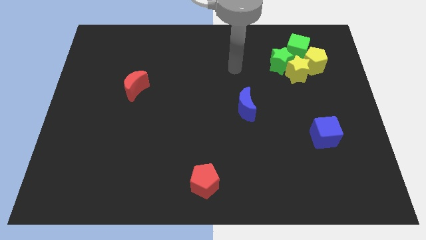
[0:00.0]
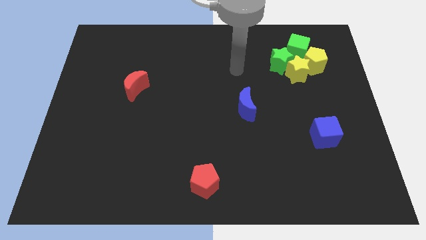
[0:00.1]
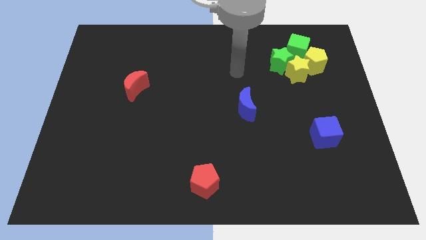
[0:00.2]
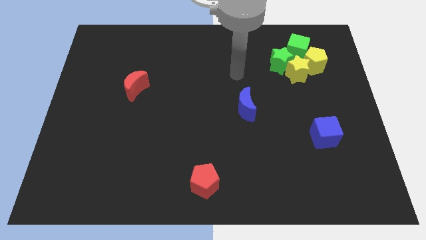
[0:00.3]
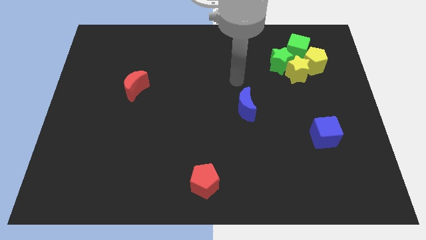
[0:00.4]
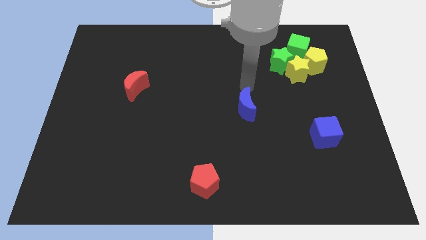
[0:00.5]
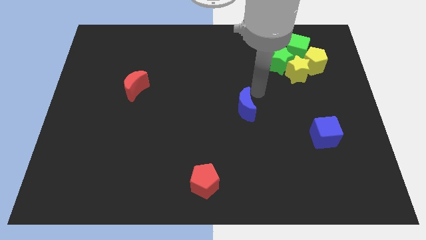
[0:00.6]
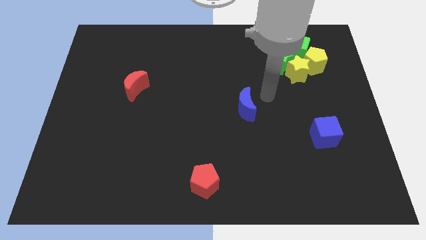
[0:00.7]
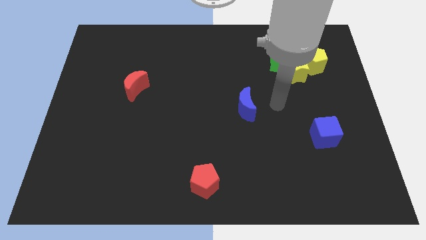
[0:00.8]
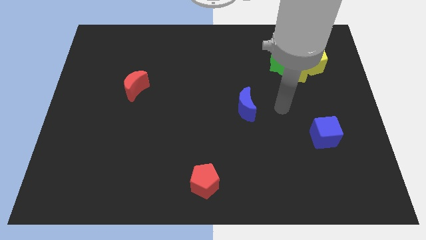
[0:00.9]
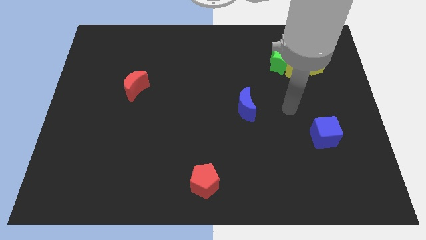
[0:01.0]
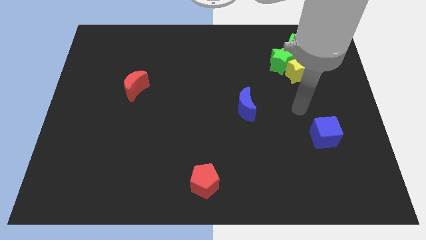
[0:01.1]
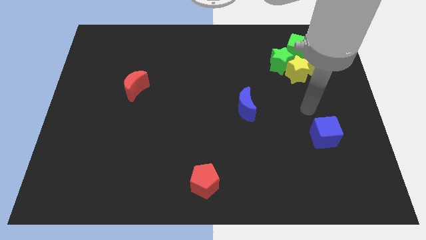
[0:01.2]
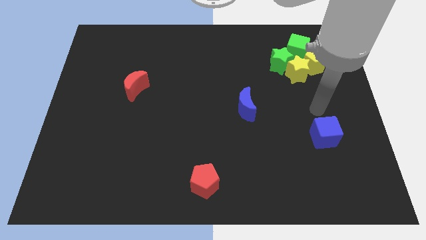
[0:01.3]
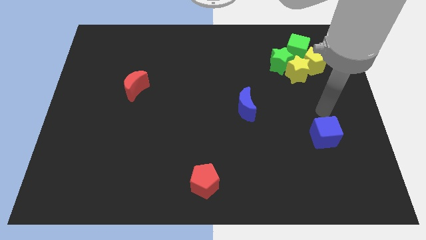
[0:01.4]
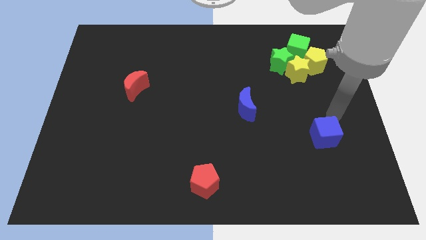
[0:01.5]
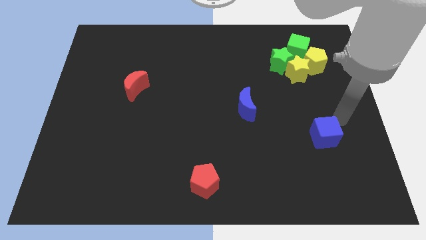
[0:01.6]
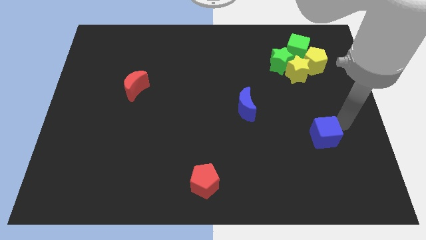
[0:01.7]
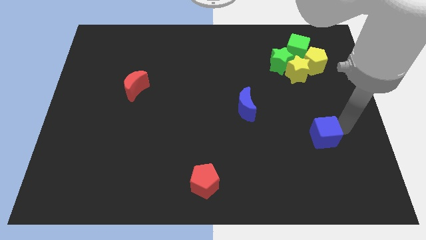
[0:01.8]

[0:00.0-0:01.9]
point the arm to the right of the blue cube

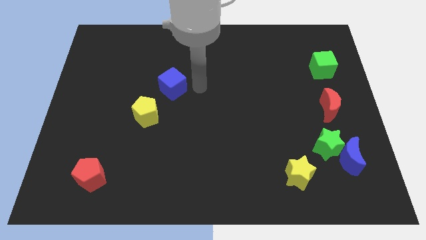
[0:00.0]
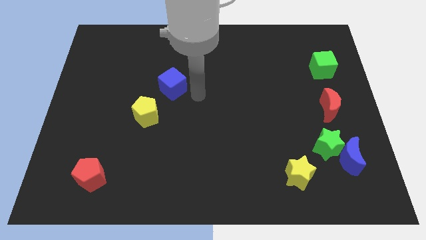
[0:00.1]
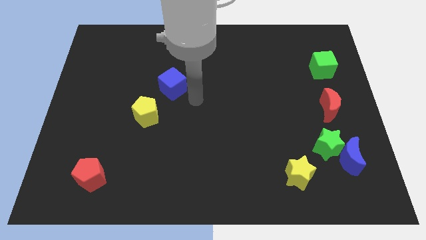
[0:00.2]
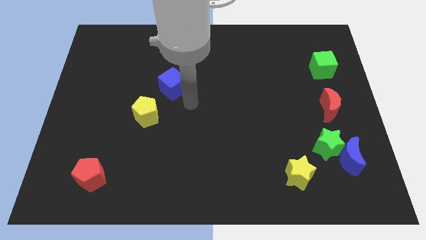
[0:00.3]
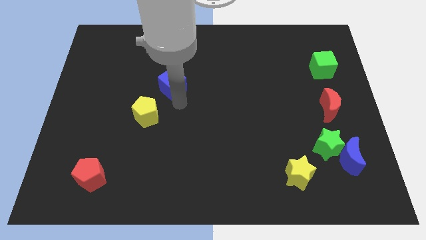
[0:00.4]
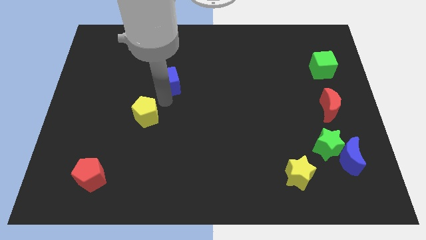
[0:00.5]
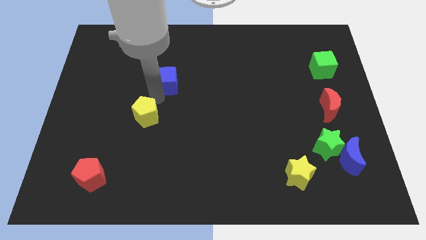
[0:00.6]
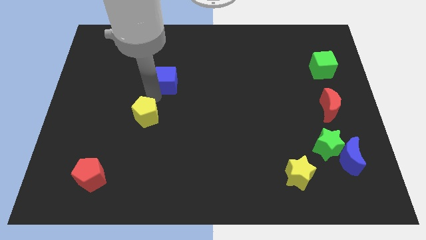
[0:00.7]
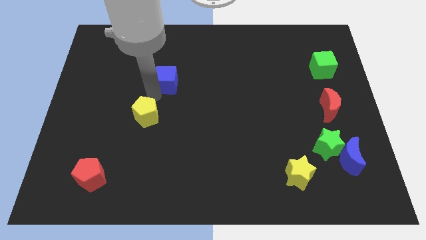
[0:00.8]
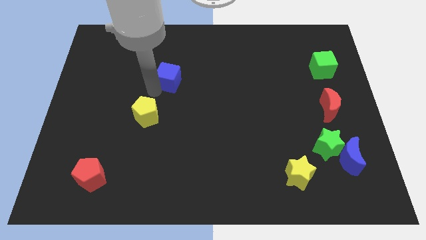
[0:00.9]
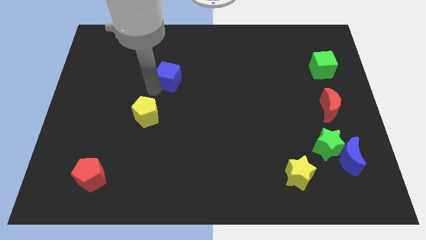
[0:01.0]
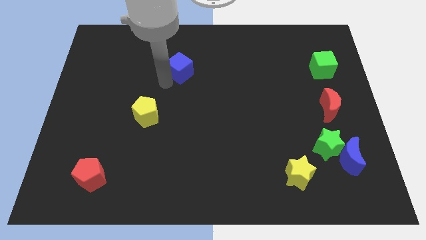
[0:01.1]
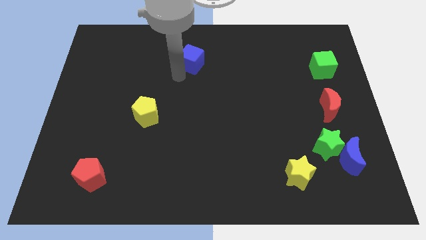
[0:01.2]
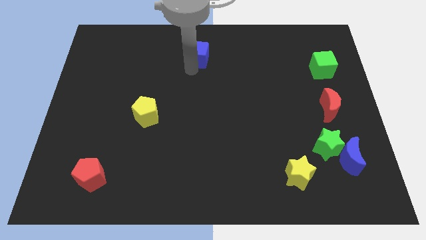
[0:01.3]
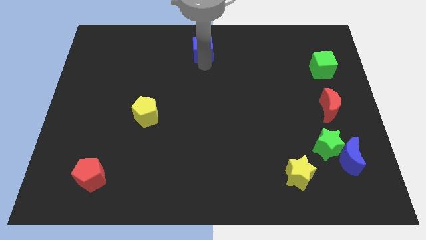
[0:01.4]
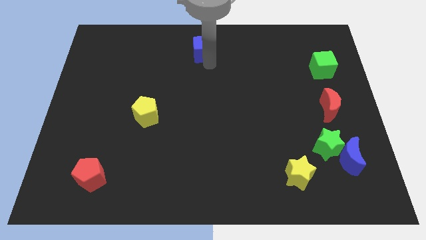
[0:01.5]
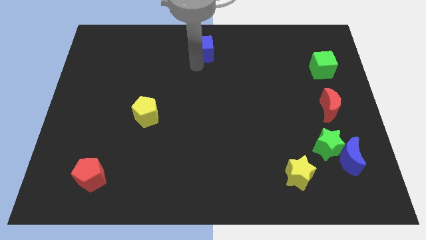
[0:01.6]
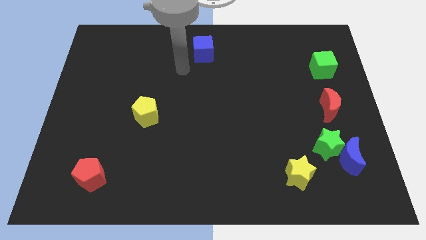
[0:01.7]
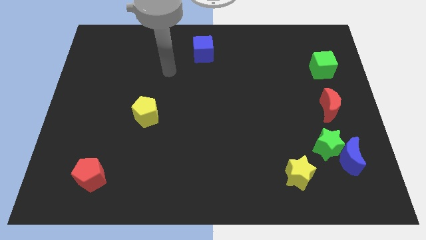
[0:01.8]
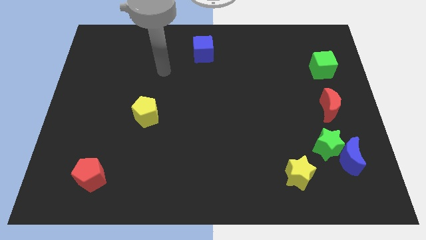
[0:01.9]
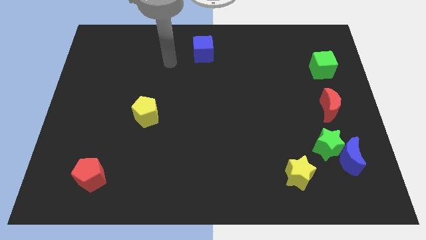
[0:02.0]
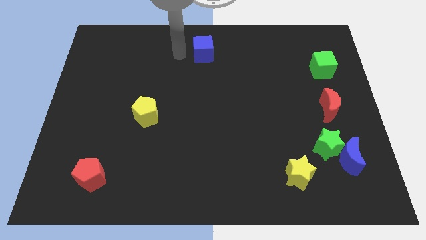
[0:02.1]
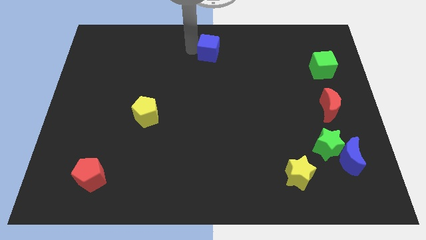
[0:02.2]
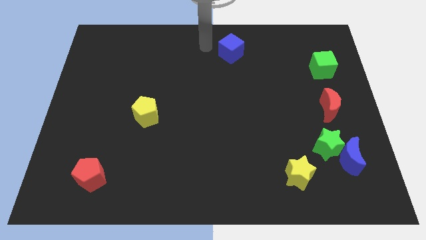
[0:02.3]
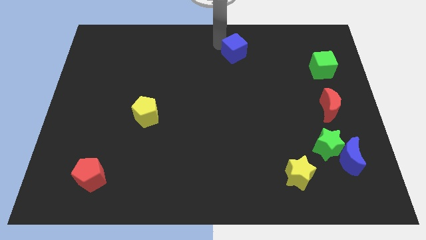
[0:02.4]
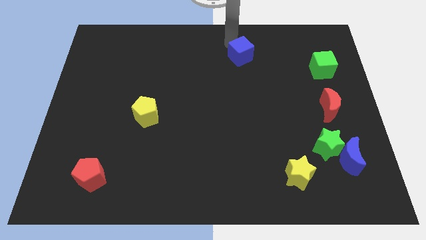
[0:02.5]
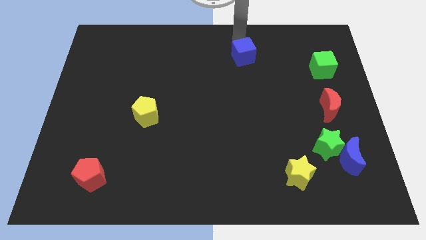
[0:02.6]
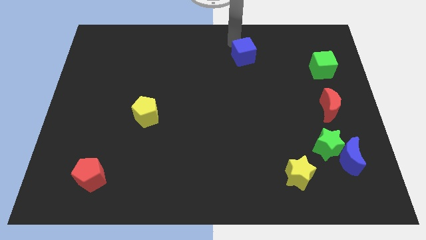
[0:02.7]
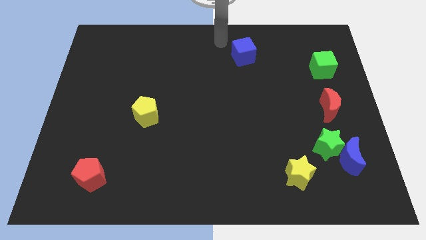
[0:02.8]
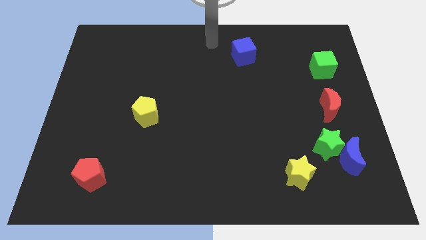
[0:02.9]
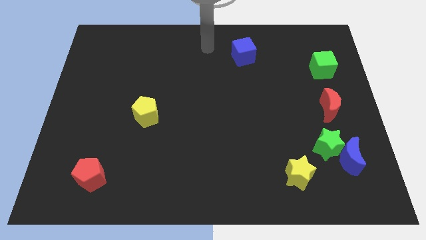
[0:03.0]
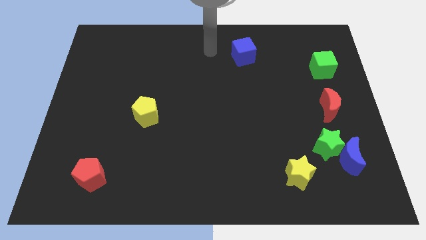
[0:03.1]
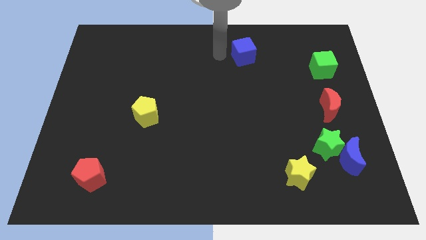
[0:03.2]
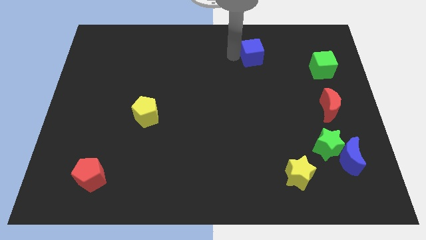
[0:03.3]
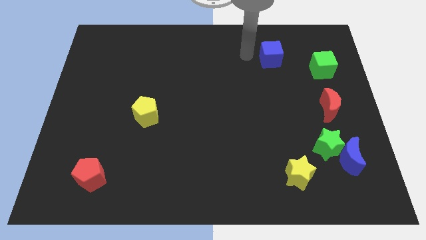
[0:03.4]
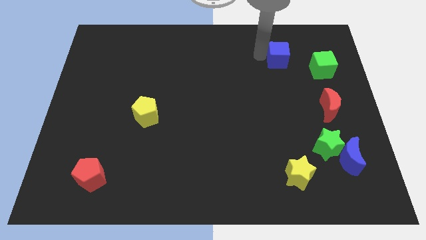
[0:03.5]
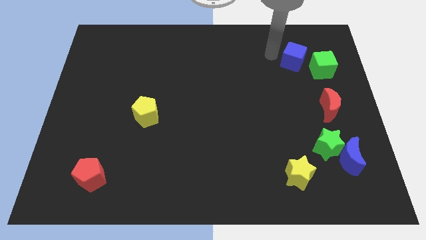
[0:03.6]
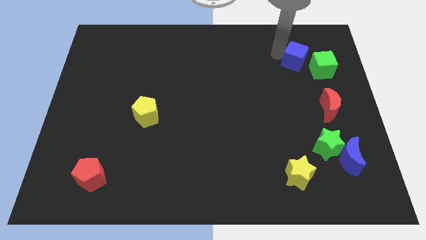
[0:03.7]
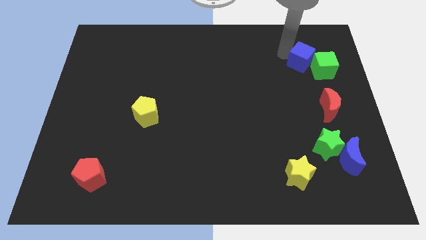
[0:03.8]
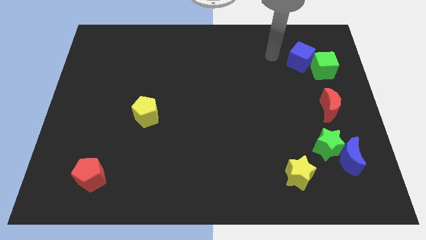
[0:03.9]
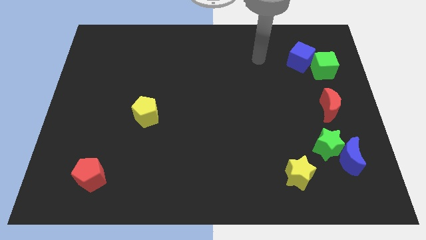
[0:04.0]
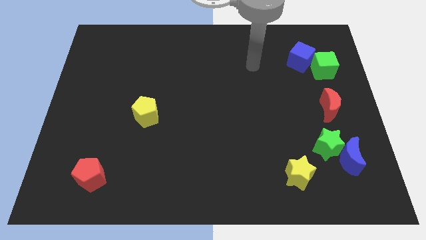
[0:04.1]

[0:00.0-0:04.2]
push blue cube close to green cube

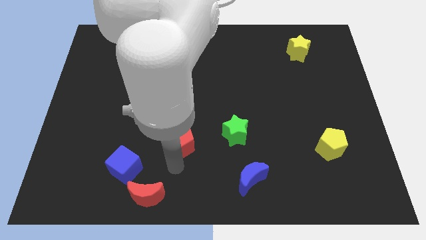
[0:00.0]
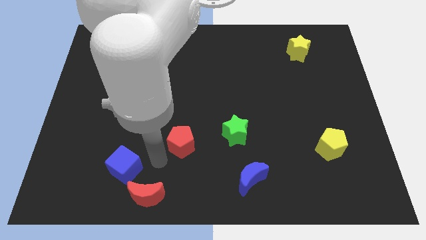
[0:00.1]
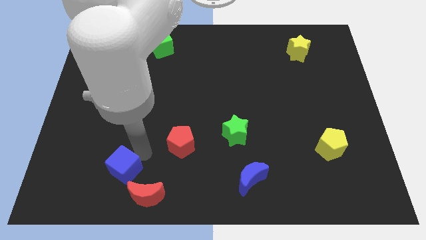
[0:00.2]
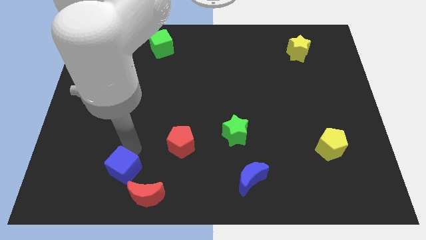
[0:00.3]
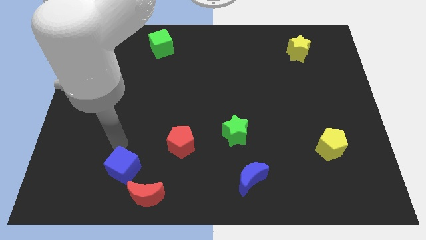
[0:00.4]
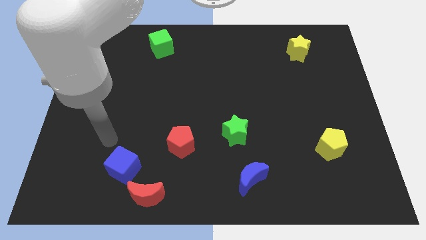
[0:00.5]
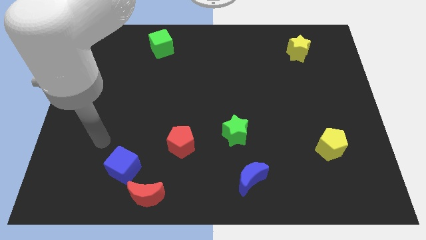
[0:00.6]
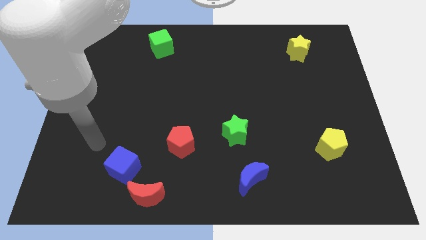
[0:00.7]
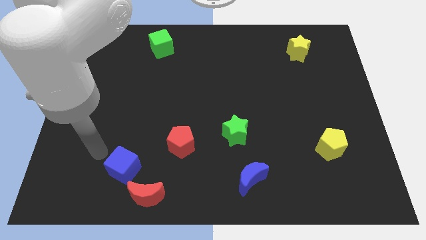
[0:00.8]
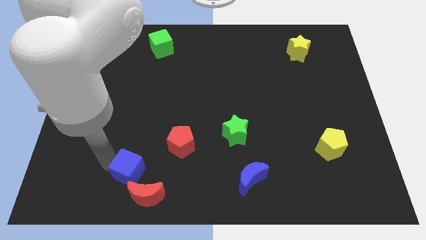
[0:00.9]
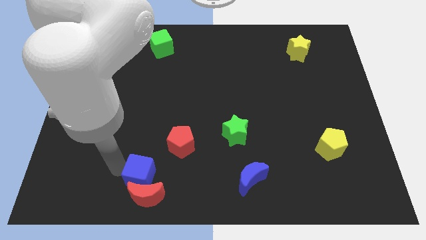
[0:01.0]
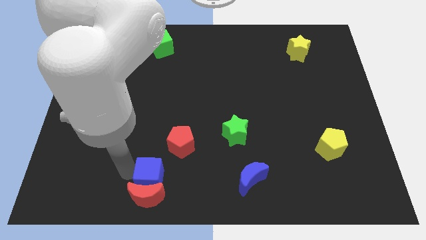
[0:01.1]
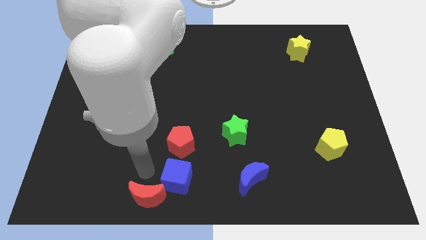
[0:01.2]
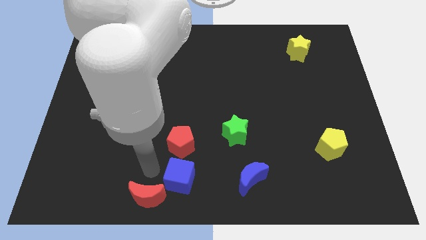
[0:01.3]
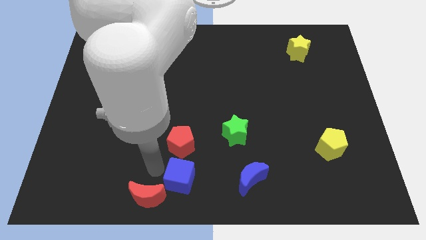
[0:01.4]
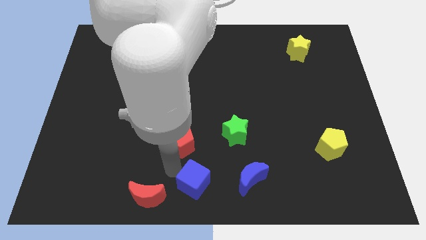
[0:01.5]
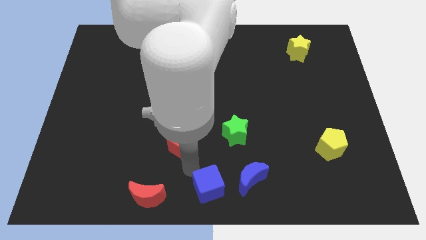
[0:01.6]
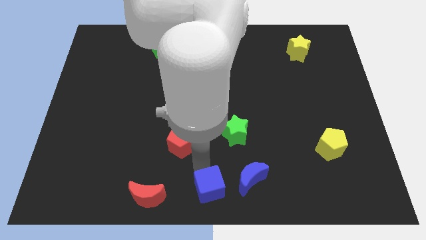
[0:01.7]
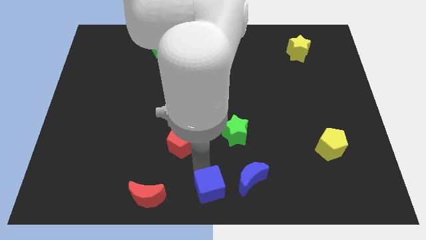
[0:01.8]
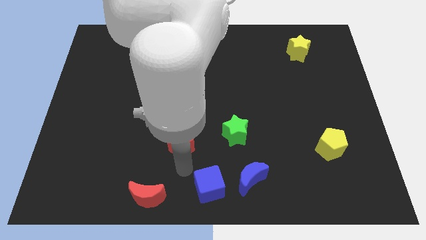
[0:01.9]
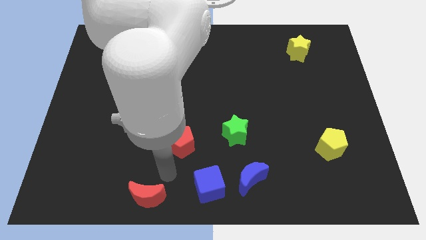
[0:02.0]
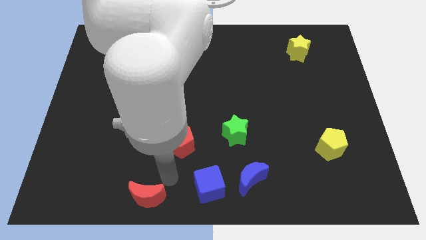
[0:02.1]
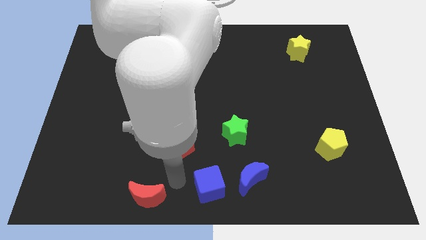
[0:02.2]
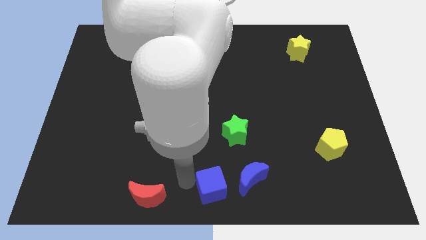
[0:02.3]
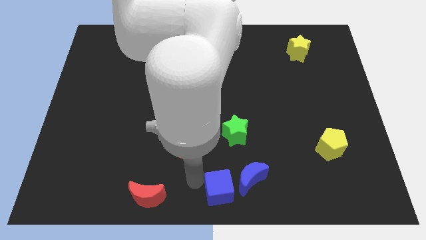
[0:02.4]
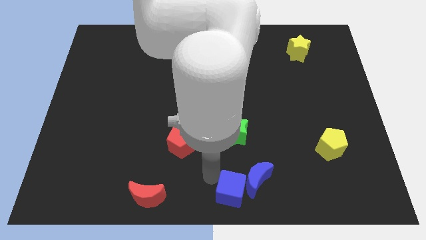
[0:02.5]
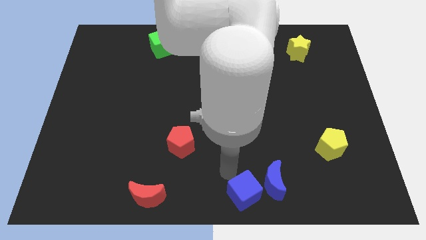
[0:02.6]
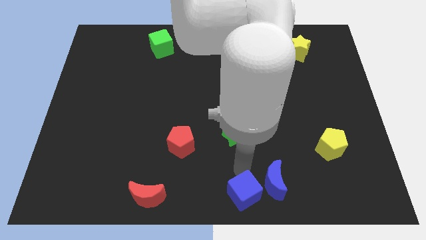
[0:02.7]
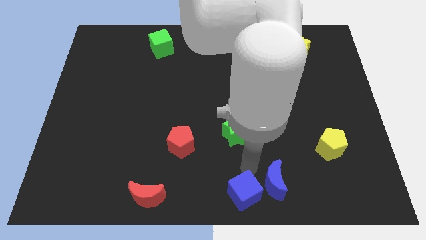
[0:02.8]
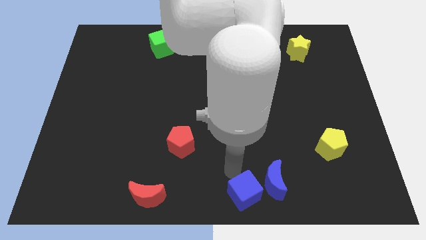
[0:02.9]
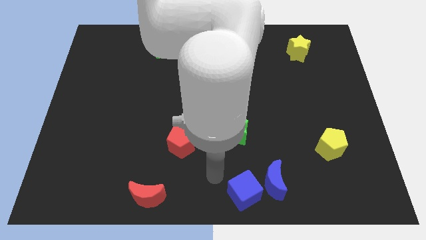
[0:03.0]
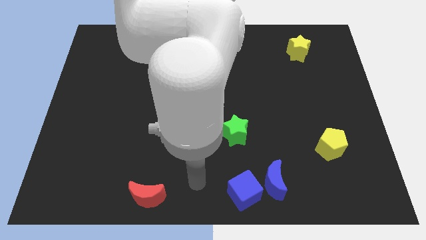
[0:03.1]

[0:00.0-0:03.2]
move blue cube to the left of the blue moon
